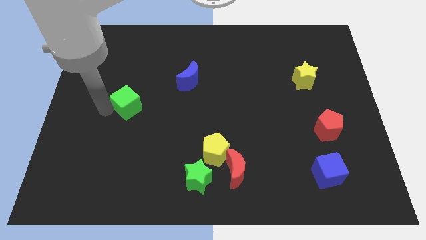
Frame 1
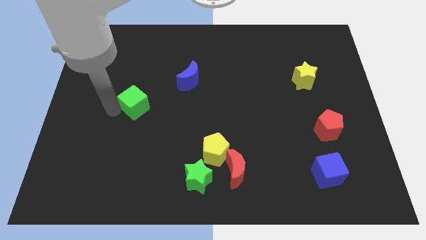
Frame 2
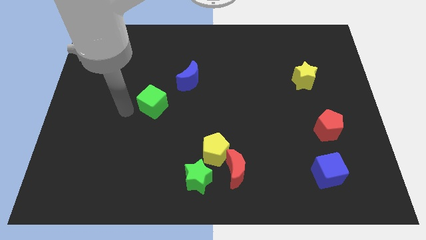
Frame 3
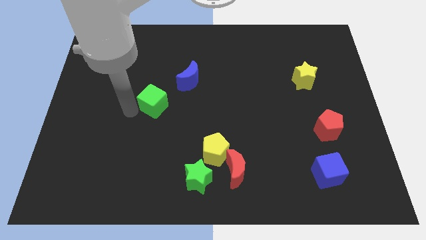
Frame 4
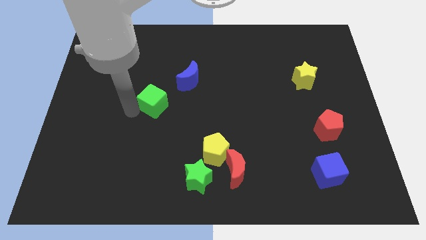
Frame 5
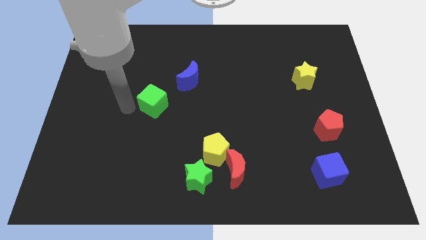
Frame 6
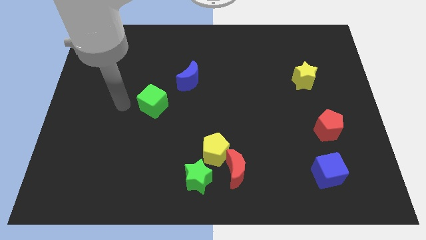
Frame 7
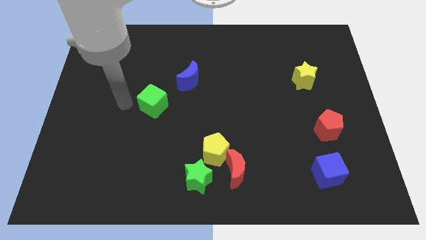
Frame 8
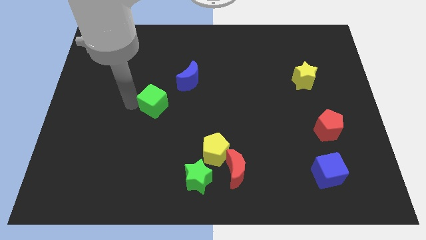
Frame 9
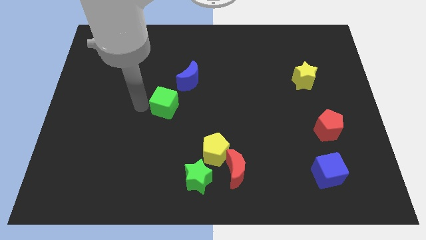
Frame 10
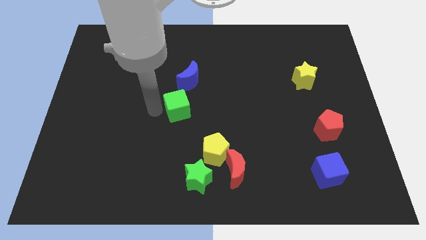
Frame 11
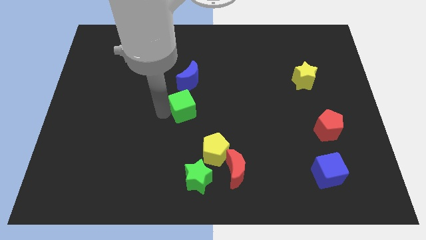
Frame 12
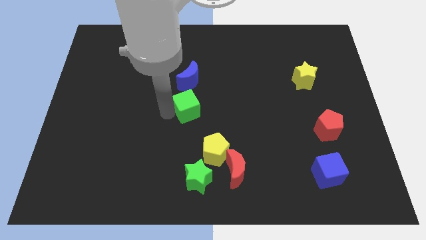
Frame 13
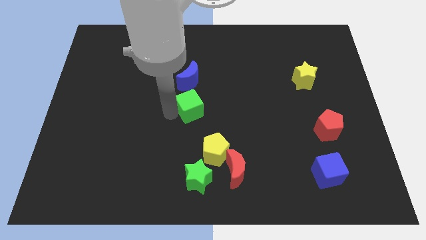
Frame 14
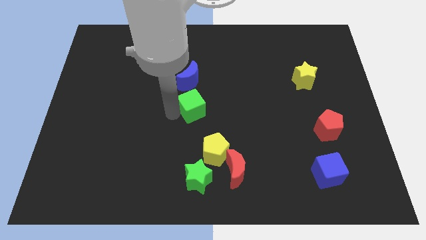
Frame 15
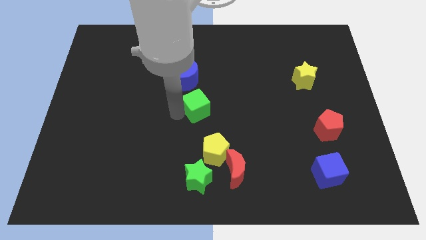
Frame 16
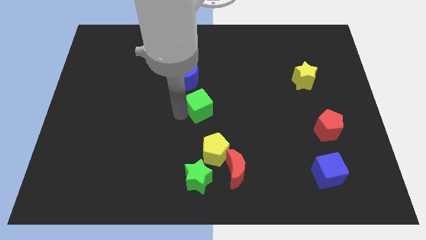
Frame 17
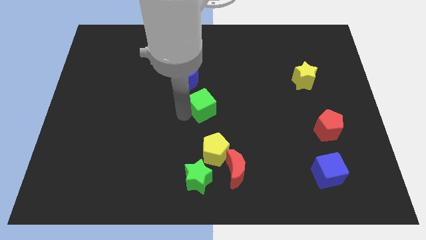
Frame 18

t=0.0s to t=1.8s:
move the green cube to the right side

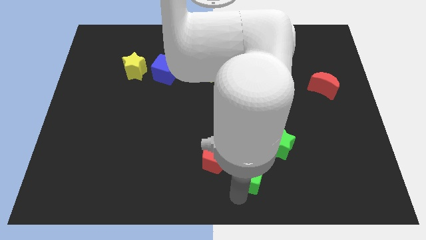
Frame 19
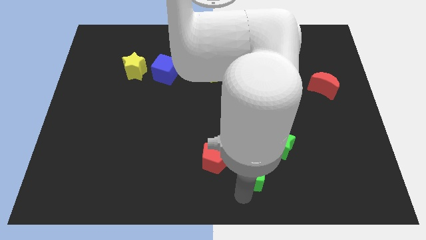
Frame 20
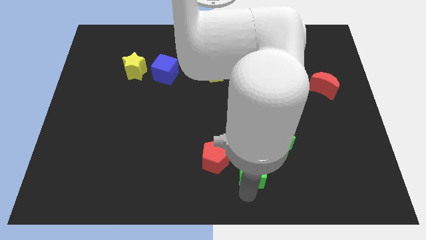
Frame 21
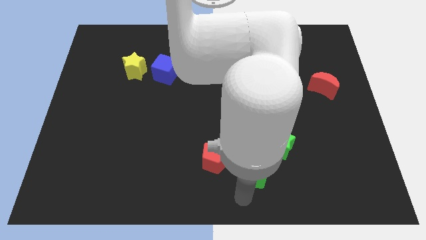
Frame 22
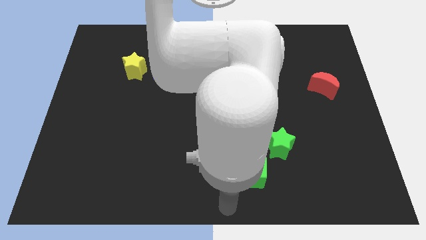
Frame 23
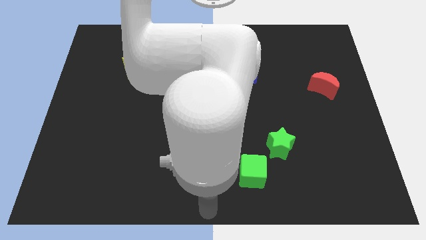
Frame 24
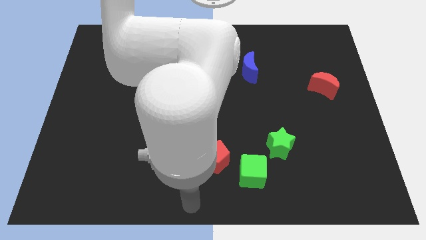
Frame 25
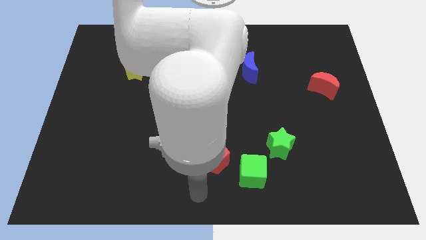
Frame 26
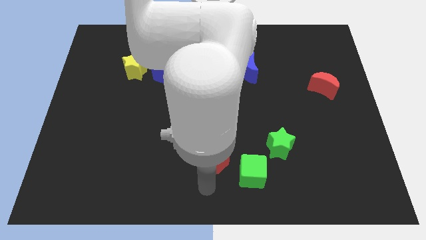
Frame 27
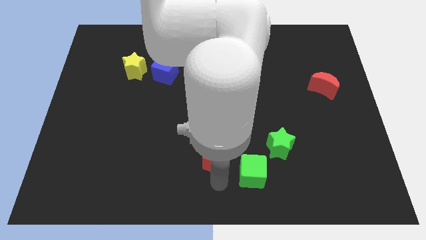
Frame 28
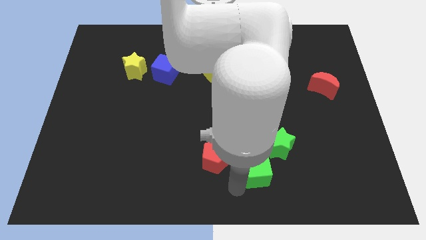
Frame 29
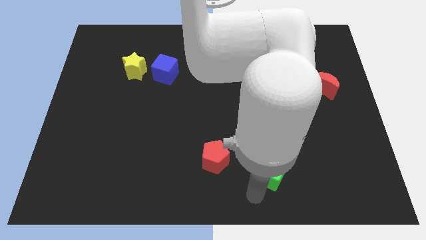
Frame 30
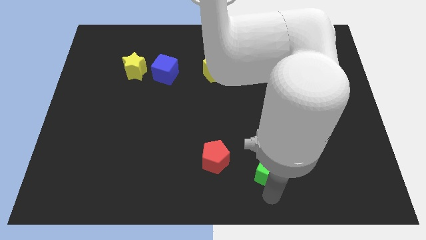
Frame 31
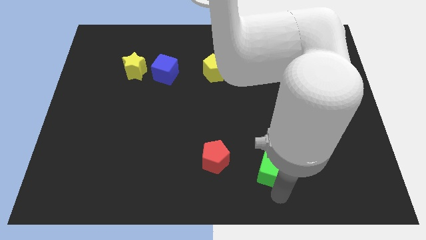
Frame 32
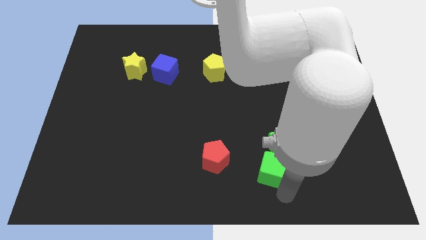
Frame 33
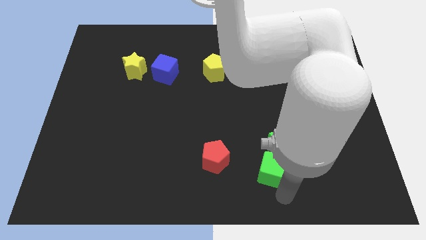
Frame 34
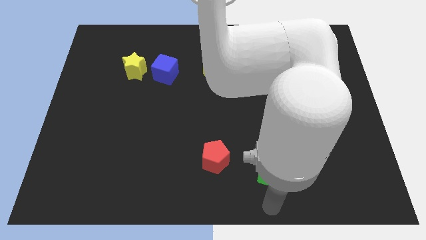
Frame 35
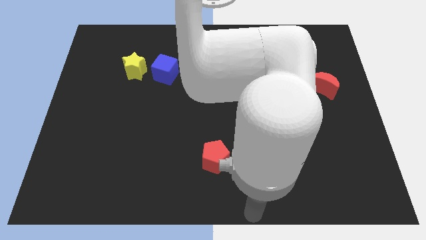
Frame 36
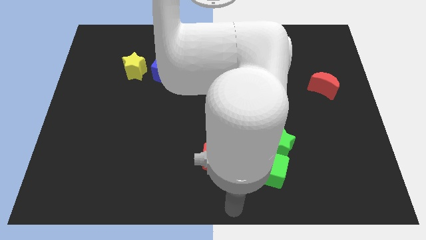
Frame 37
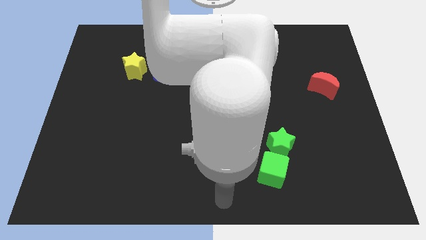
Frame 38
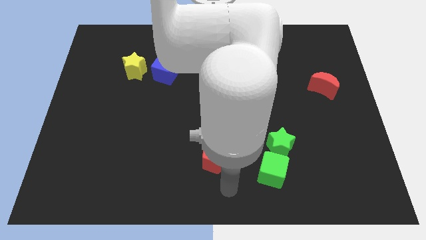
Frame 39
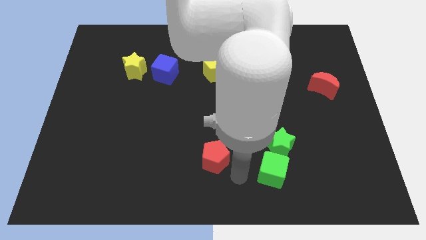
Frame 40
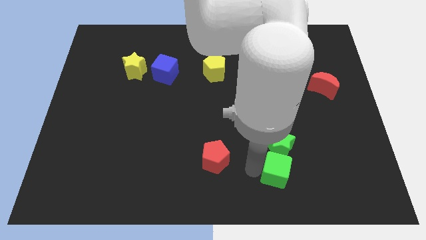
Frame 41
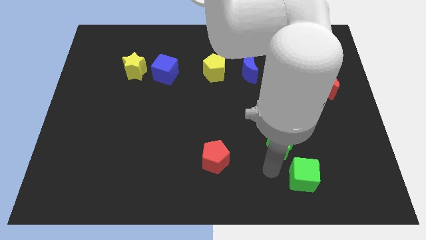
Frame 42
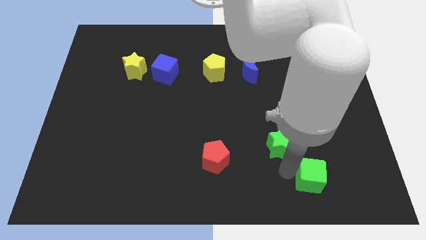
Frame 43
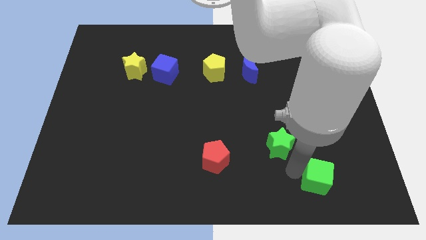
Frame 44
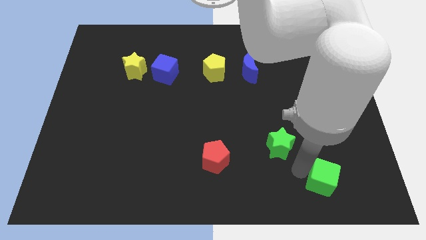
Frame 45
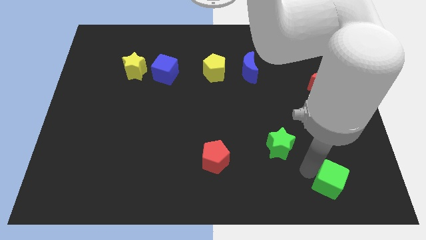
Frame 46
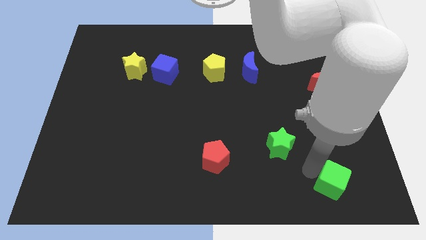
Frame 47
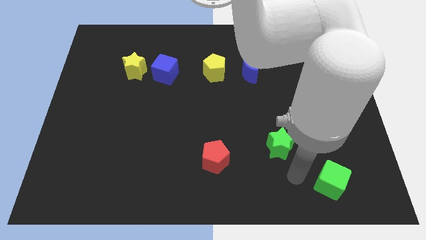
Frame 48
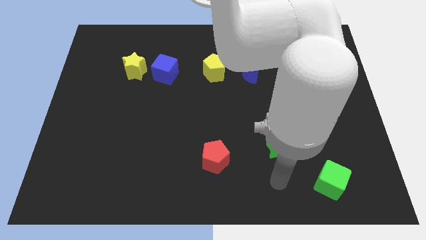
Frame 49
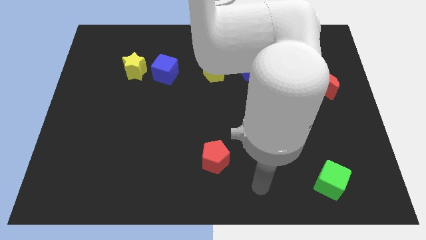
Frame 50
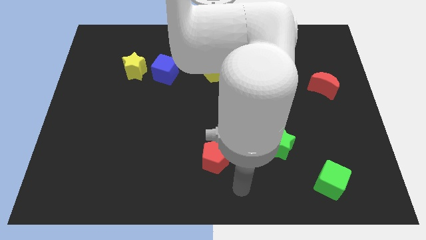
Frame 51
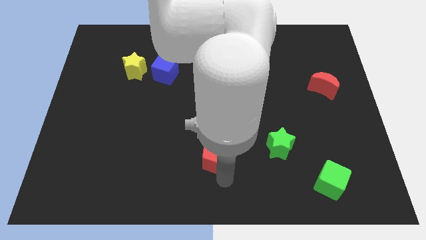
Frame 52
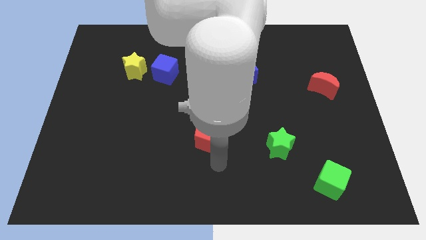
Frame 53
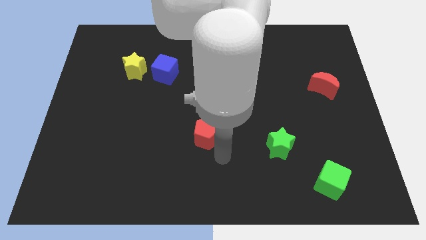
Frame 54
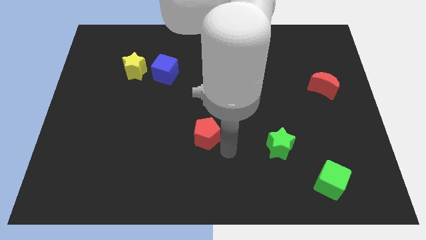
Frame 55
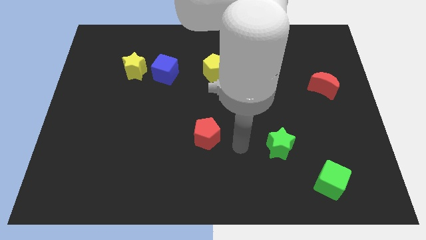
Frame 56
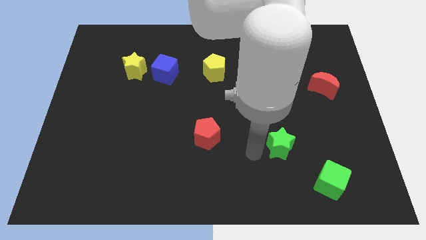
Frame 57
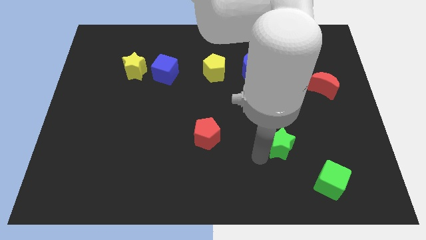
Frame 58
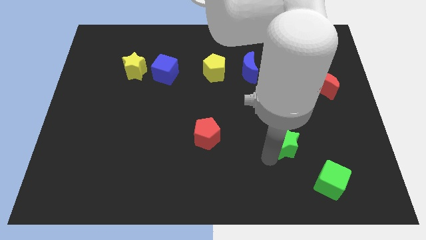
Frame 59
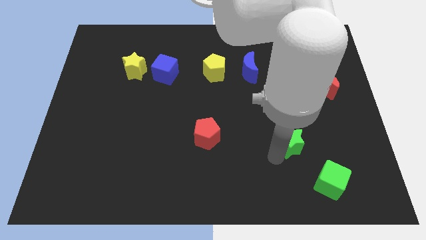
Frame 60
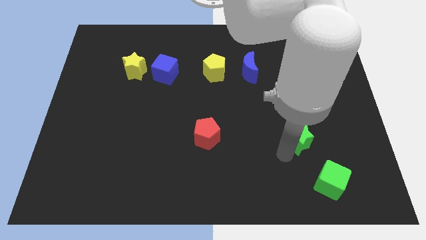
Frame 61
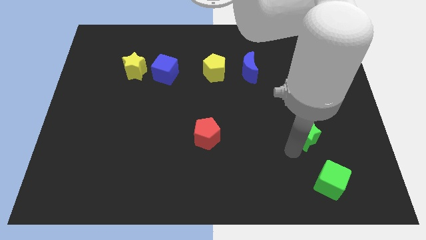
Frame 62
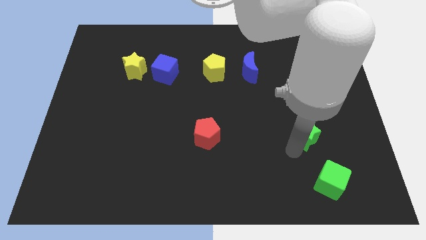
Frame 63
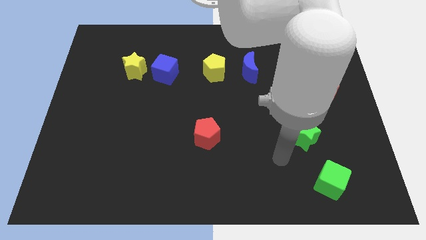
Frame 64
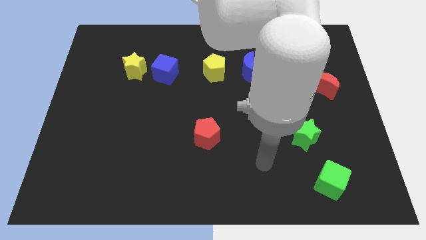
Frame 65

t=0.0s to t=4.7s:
place the green blocks in a vertical line

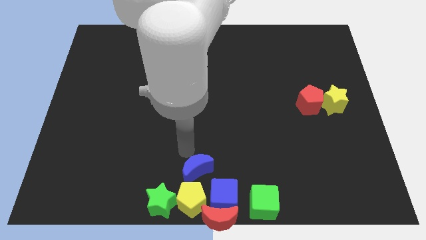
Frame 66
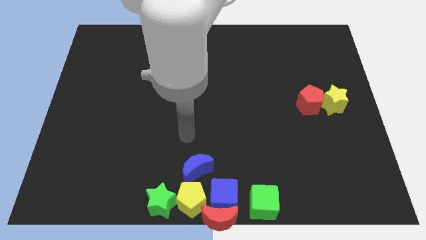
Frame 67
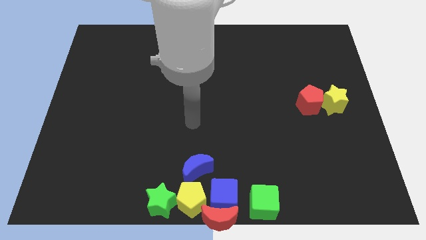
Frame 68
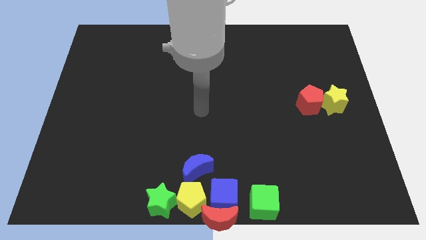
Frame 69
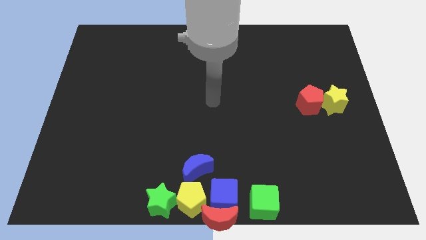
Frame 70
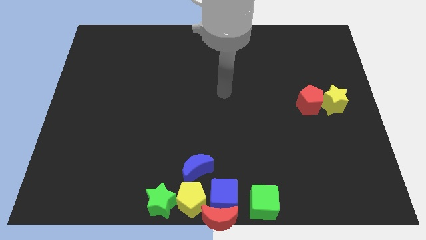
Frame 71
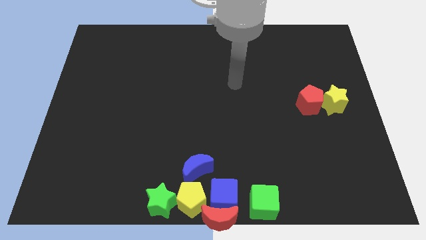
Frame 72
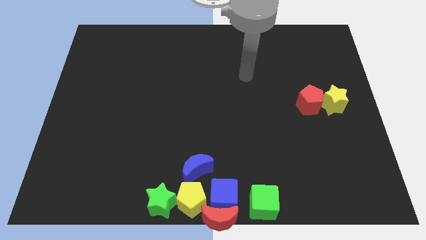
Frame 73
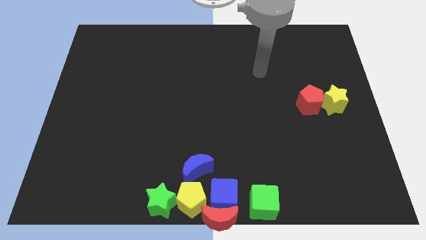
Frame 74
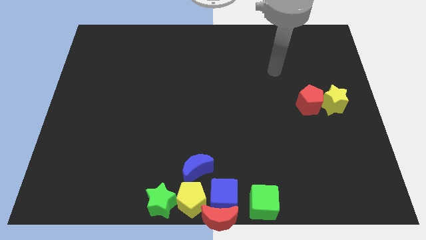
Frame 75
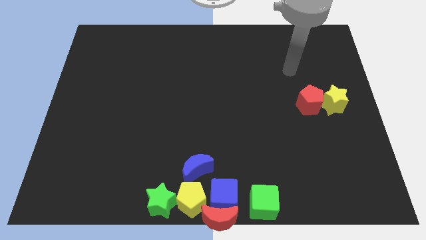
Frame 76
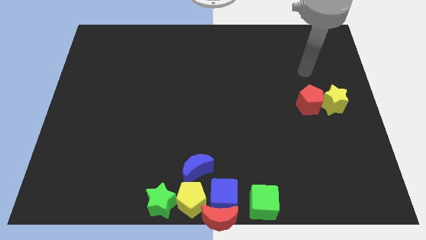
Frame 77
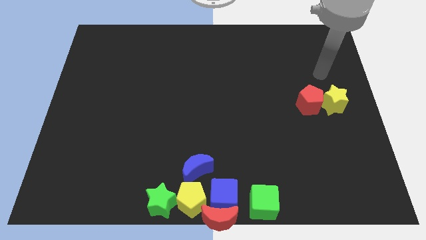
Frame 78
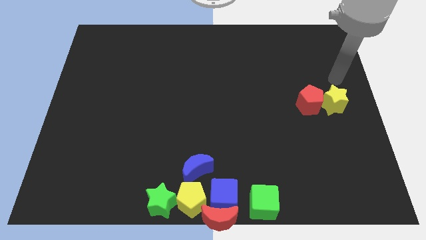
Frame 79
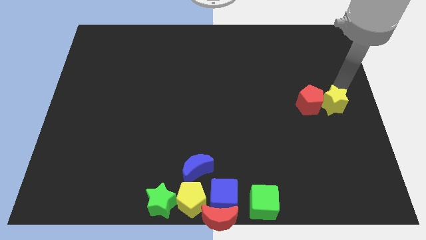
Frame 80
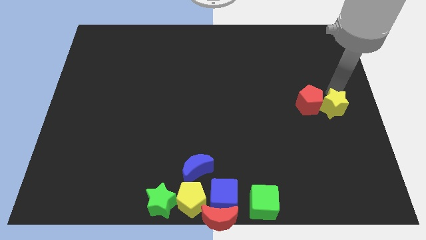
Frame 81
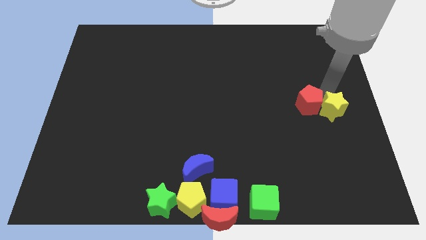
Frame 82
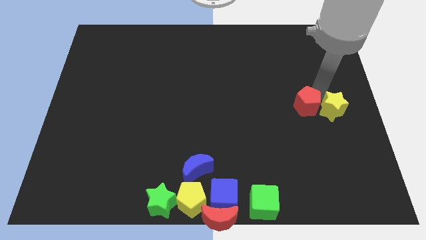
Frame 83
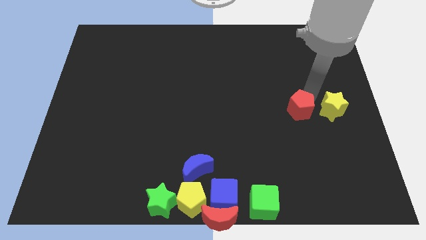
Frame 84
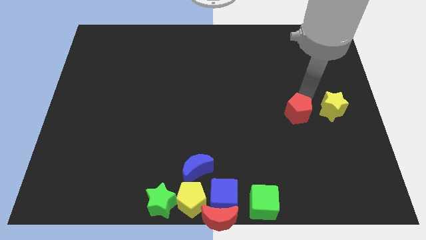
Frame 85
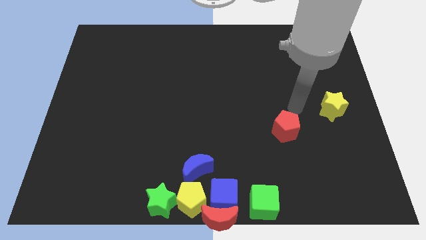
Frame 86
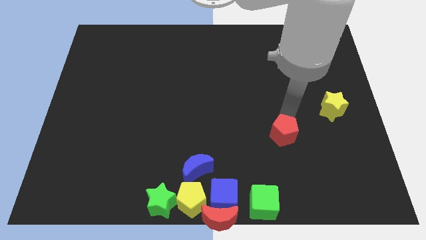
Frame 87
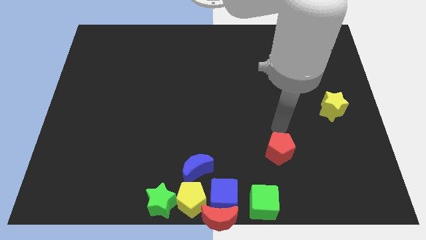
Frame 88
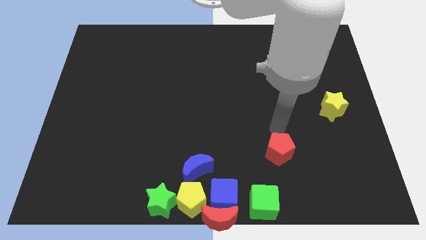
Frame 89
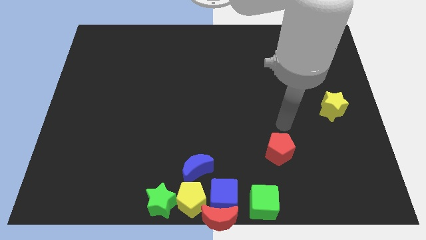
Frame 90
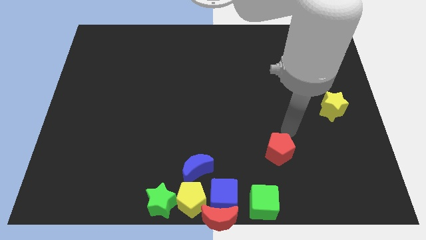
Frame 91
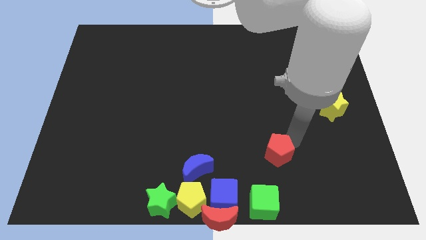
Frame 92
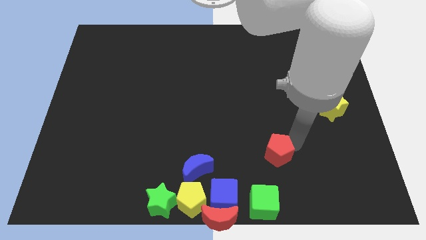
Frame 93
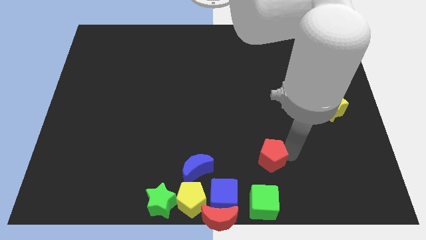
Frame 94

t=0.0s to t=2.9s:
place the red pentagon above the green cube
